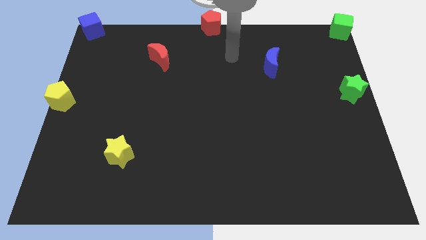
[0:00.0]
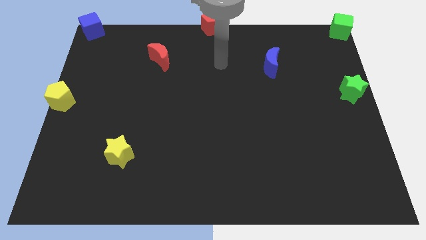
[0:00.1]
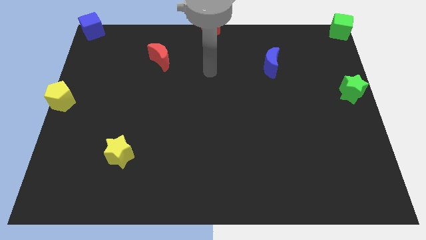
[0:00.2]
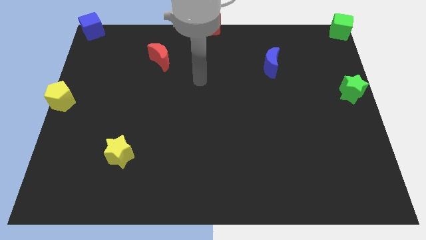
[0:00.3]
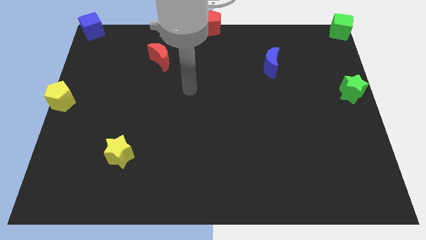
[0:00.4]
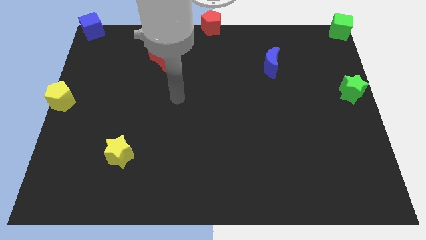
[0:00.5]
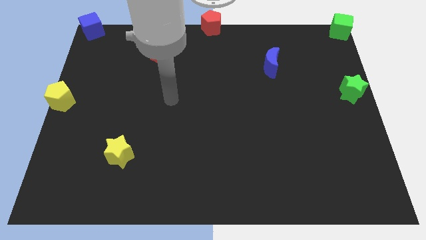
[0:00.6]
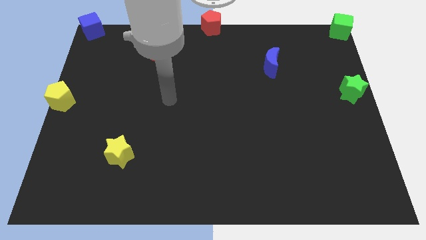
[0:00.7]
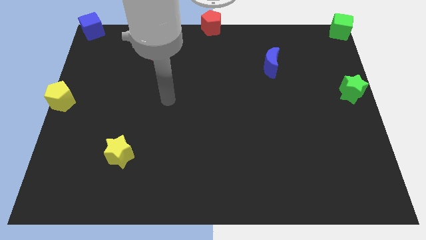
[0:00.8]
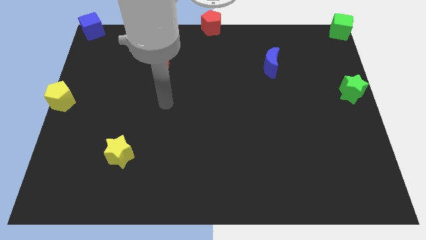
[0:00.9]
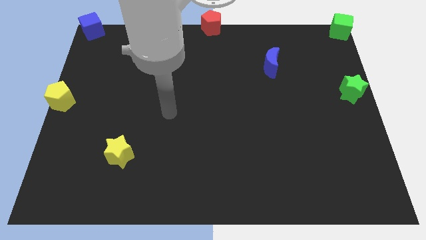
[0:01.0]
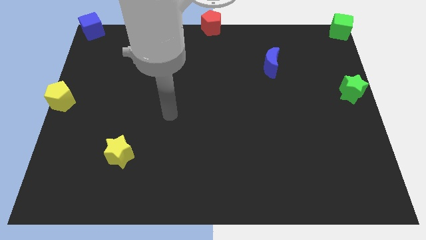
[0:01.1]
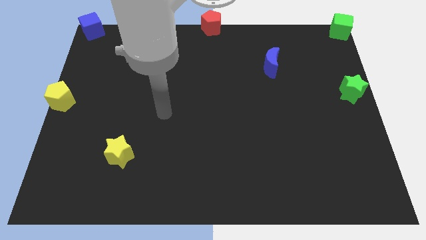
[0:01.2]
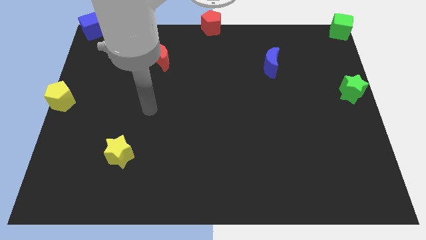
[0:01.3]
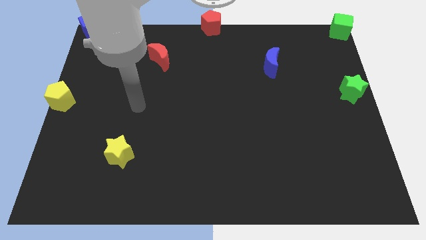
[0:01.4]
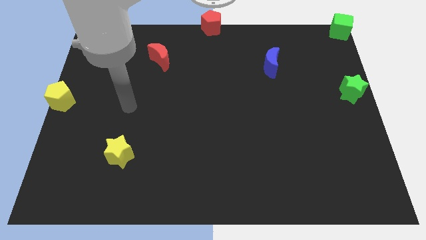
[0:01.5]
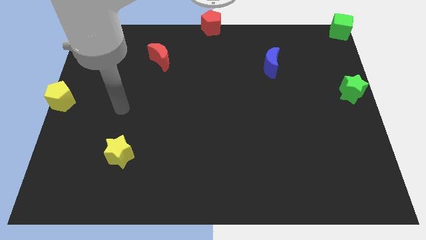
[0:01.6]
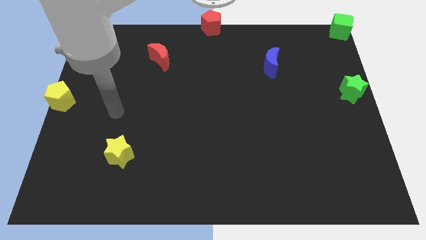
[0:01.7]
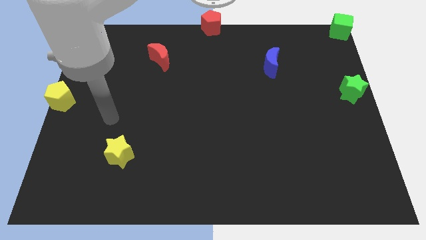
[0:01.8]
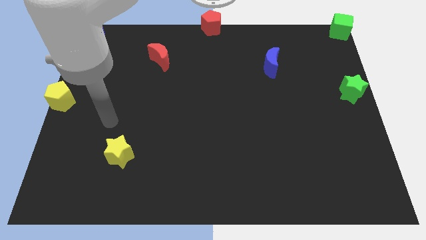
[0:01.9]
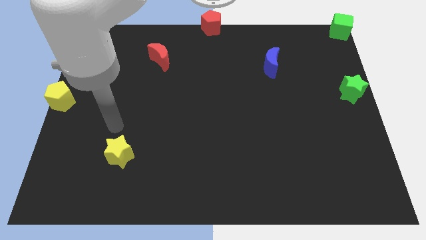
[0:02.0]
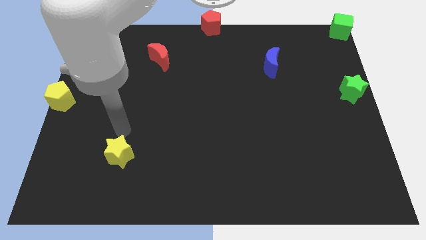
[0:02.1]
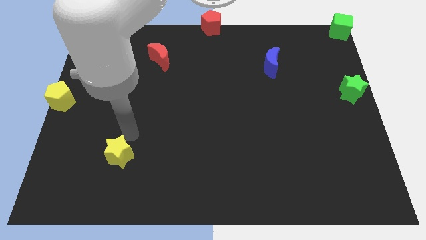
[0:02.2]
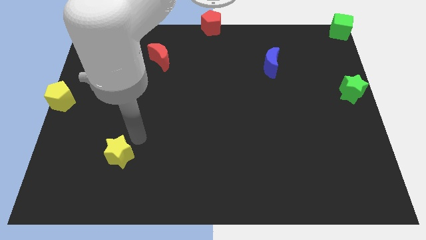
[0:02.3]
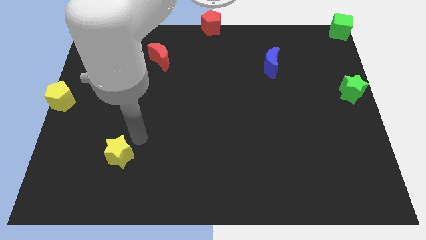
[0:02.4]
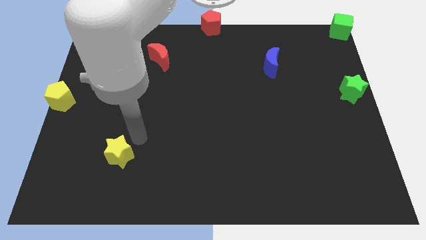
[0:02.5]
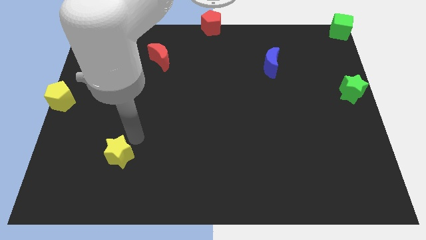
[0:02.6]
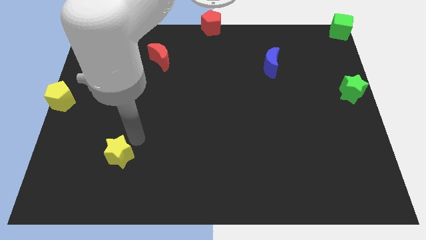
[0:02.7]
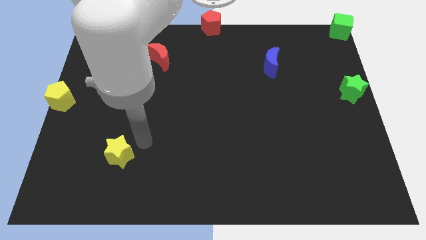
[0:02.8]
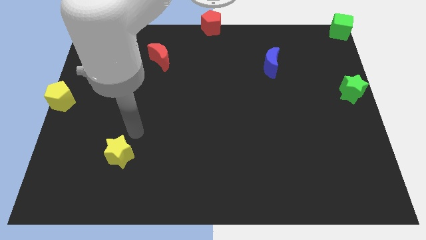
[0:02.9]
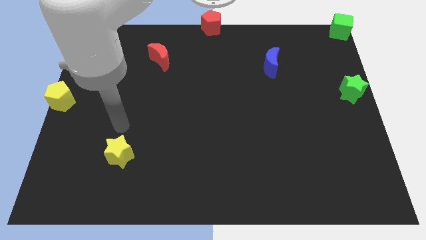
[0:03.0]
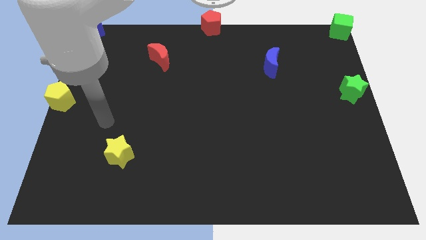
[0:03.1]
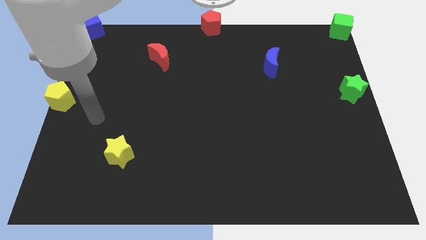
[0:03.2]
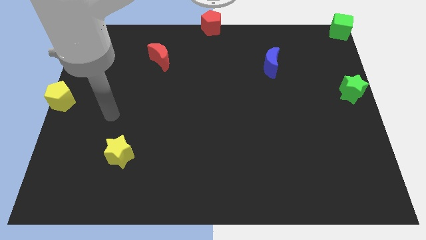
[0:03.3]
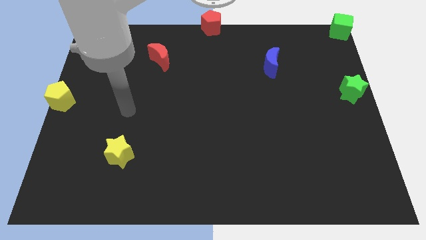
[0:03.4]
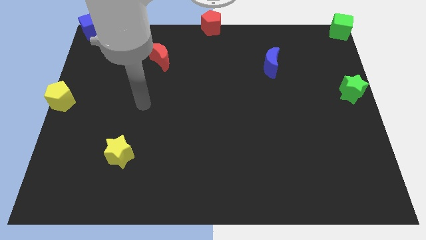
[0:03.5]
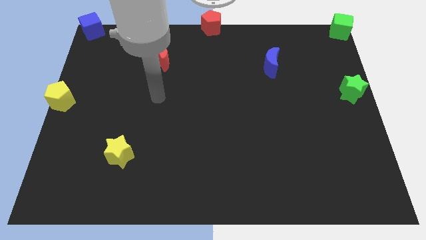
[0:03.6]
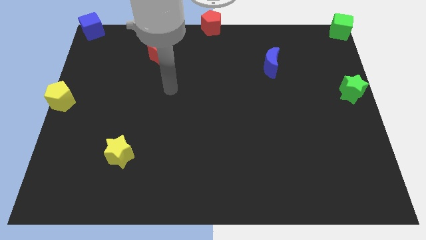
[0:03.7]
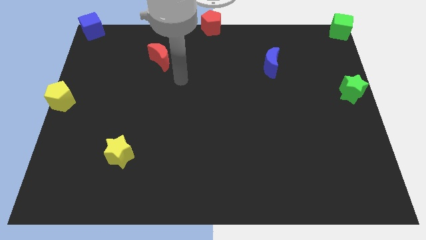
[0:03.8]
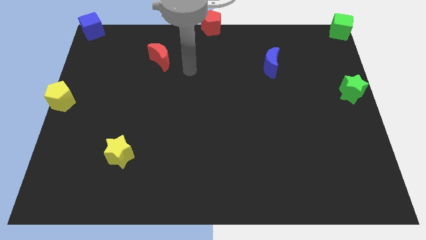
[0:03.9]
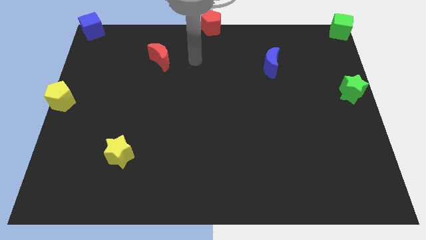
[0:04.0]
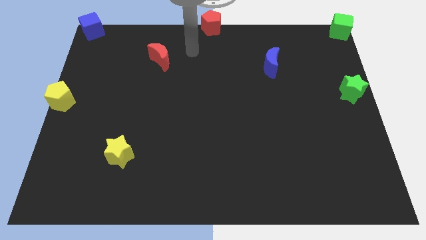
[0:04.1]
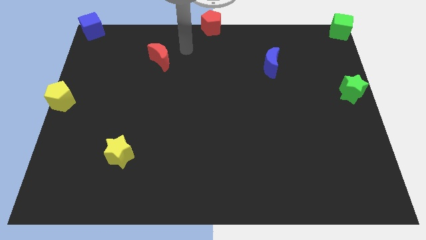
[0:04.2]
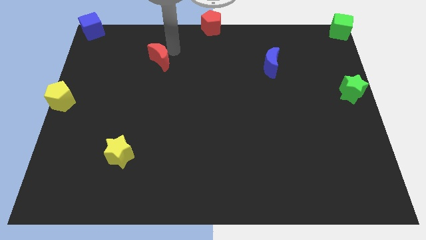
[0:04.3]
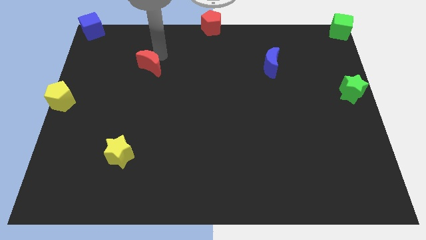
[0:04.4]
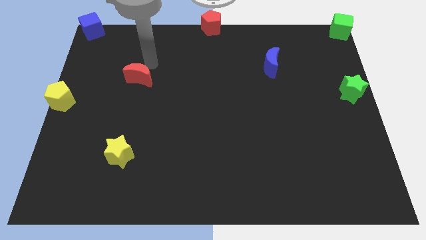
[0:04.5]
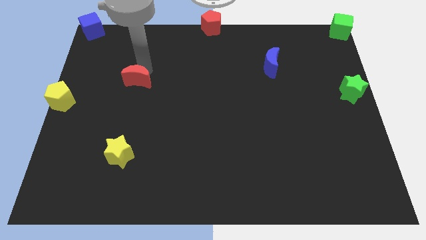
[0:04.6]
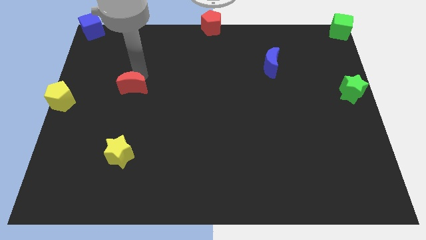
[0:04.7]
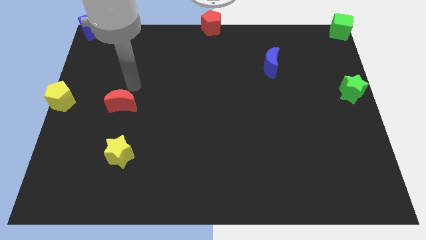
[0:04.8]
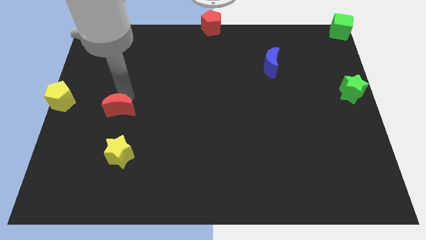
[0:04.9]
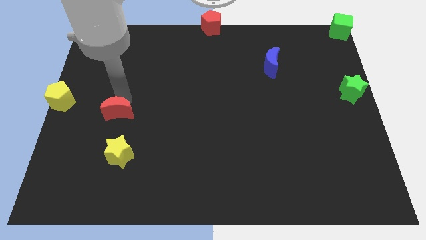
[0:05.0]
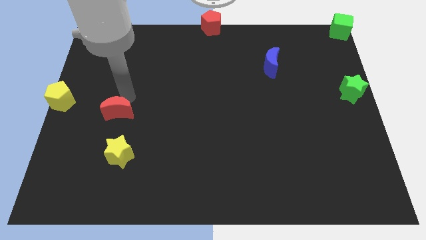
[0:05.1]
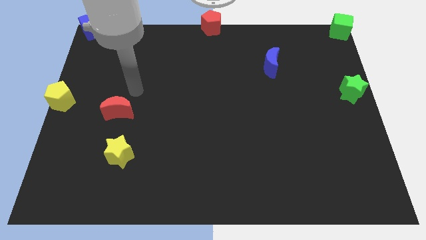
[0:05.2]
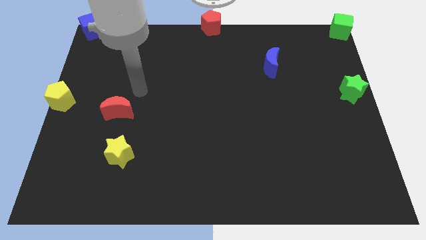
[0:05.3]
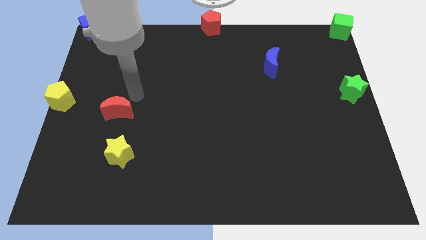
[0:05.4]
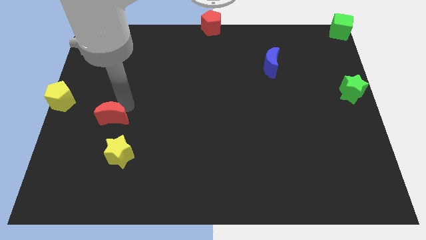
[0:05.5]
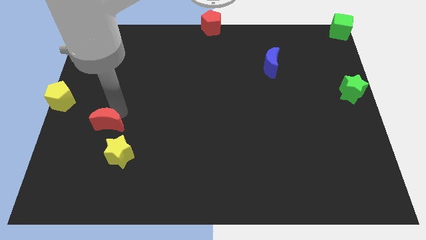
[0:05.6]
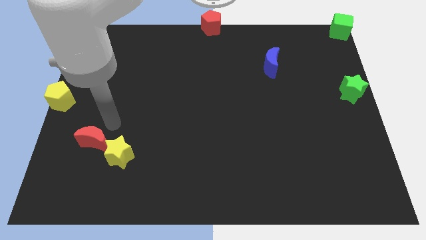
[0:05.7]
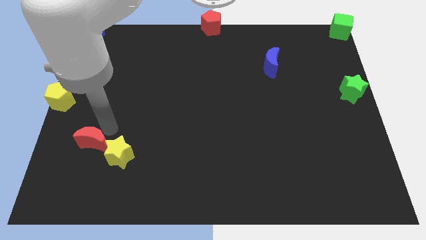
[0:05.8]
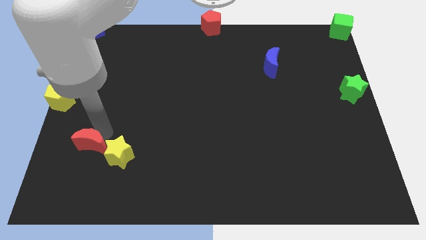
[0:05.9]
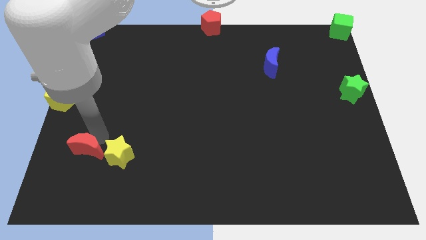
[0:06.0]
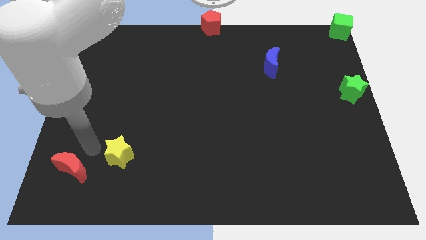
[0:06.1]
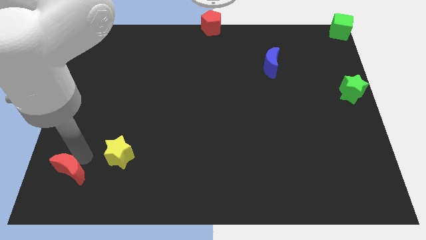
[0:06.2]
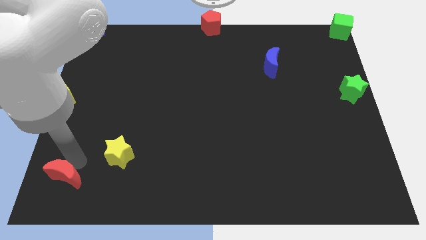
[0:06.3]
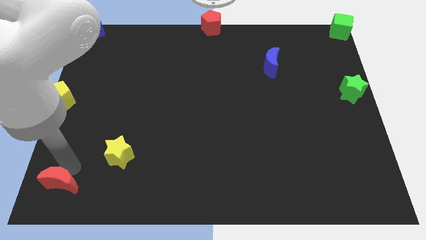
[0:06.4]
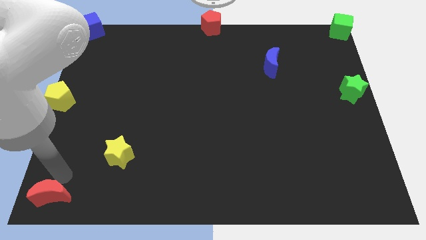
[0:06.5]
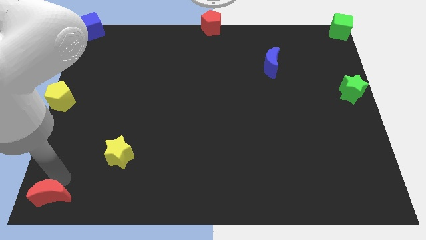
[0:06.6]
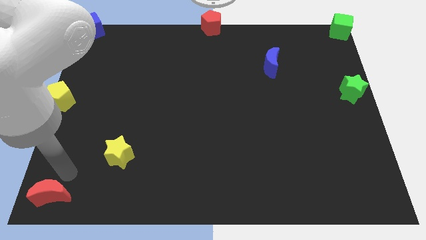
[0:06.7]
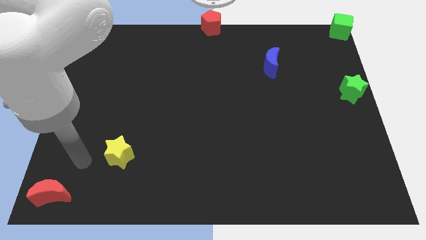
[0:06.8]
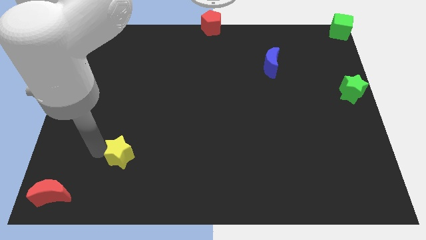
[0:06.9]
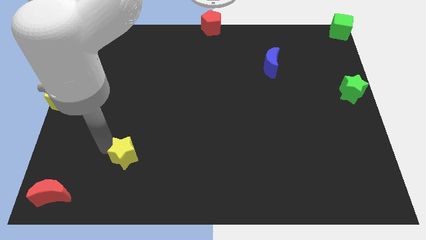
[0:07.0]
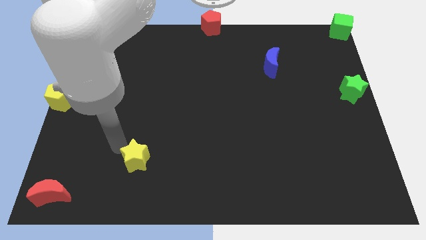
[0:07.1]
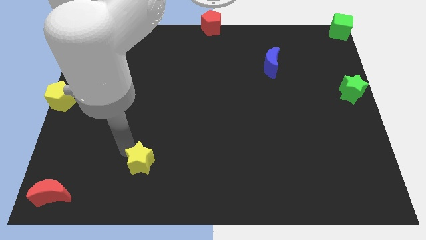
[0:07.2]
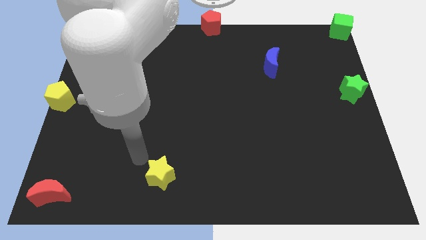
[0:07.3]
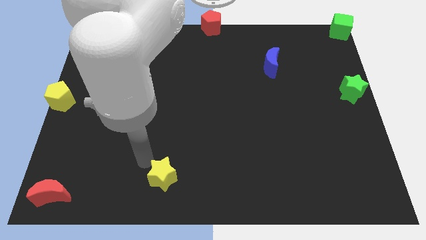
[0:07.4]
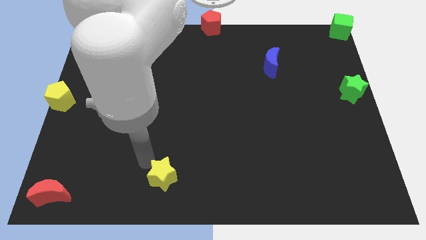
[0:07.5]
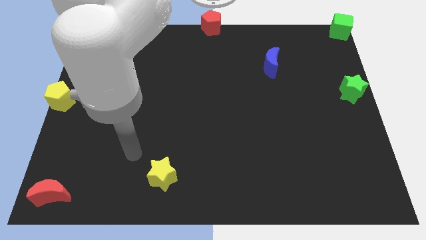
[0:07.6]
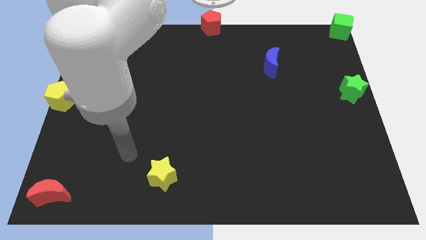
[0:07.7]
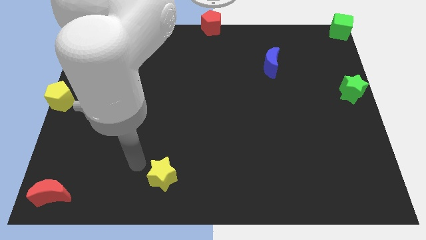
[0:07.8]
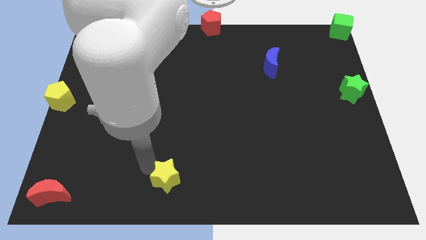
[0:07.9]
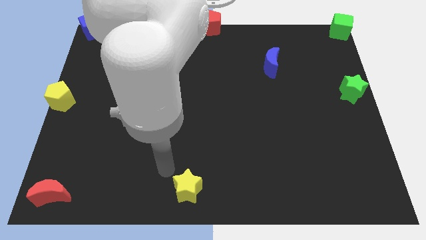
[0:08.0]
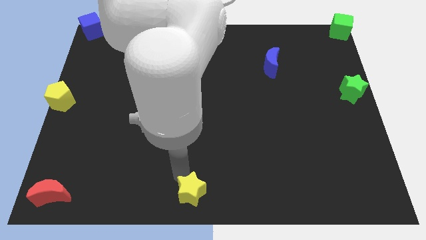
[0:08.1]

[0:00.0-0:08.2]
push the red crescent towards the left corner of the board

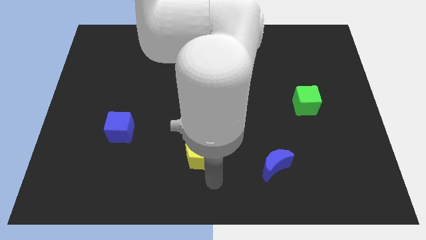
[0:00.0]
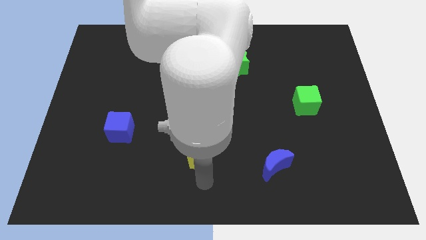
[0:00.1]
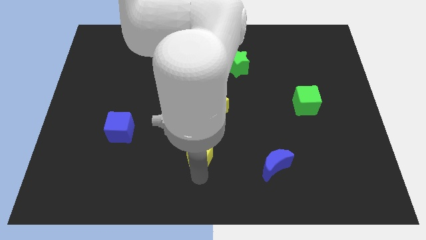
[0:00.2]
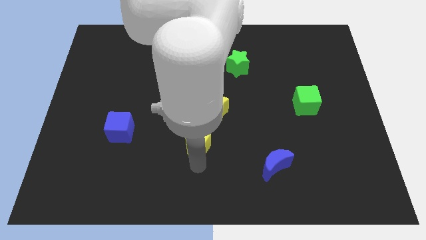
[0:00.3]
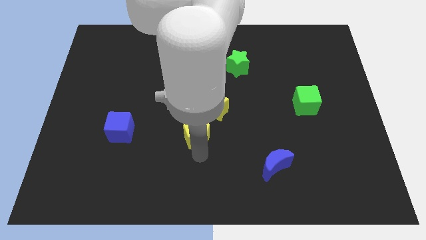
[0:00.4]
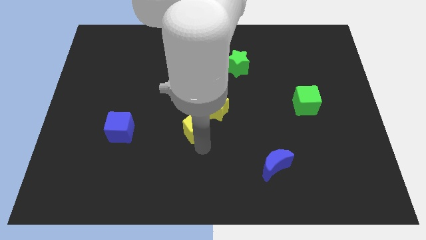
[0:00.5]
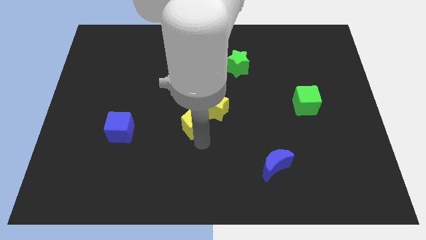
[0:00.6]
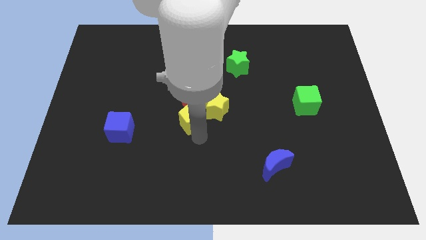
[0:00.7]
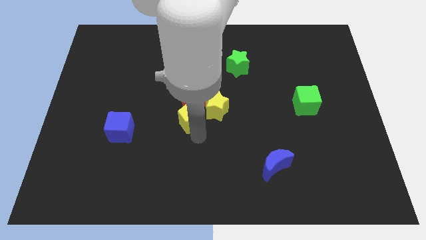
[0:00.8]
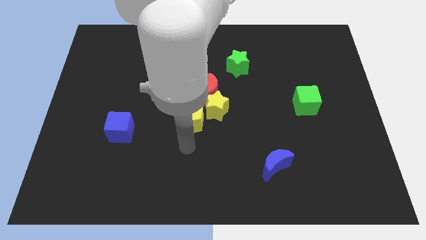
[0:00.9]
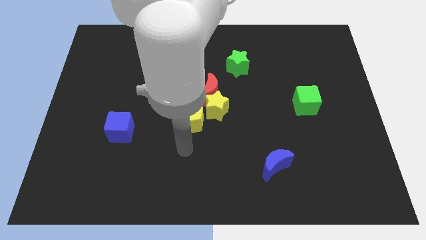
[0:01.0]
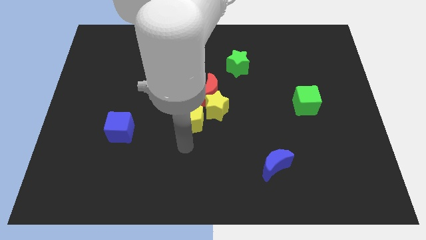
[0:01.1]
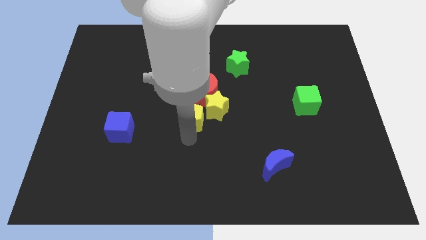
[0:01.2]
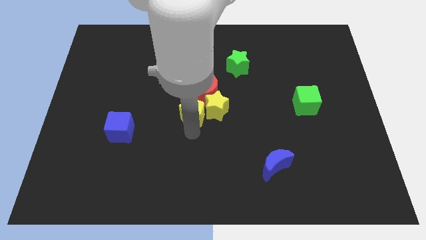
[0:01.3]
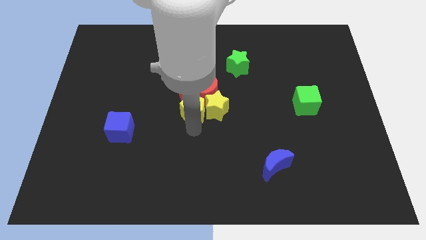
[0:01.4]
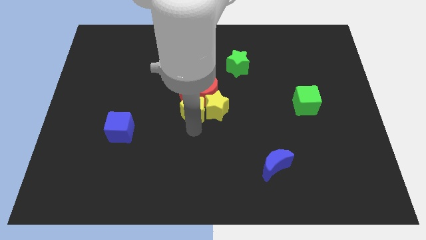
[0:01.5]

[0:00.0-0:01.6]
push yellow pentagon towards red pentagon
